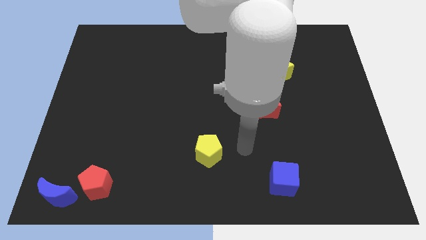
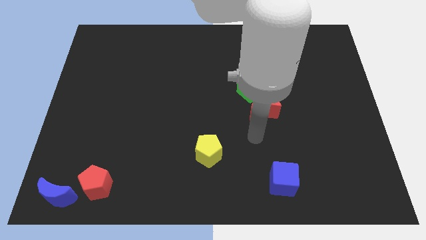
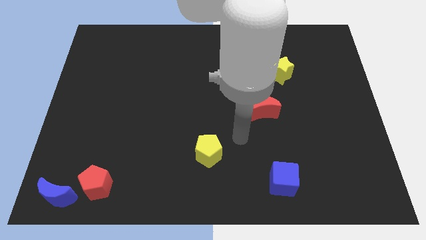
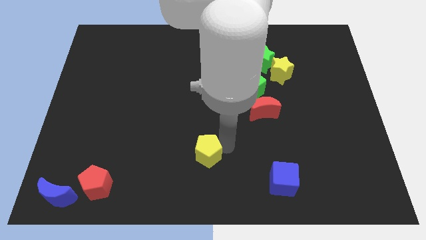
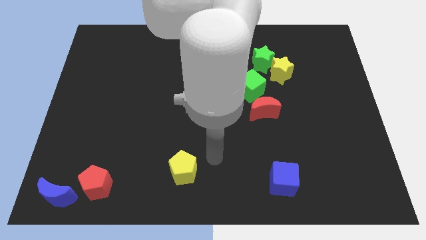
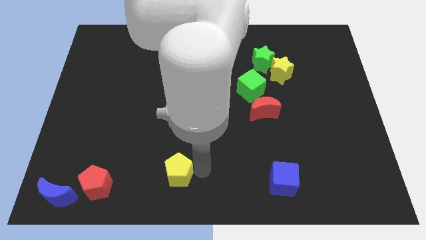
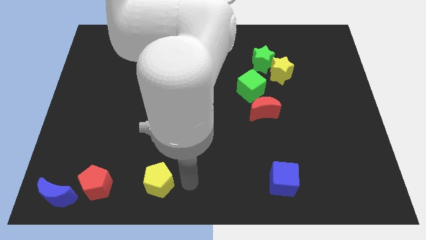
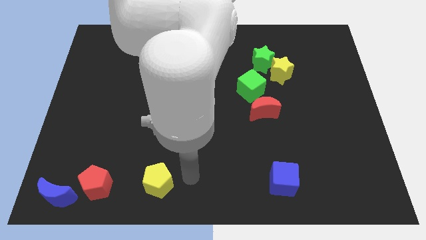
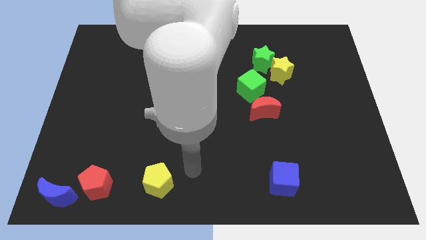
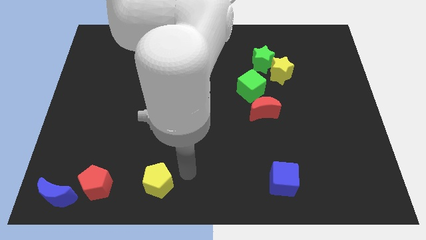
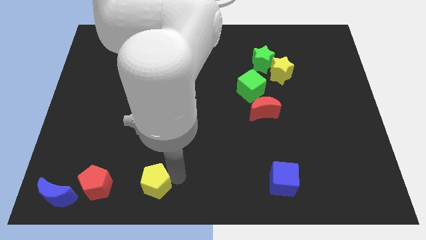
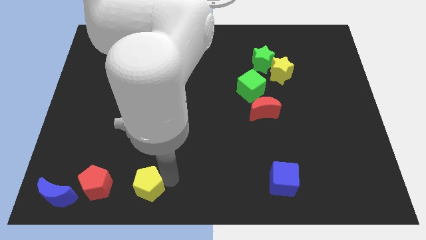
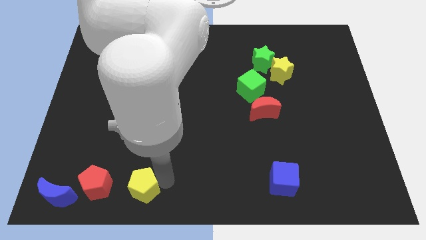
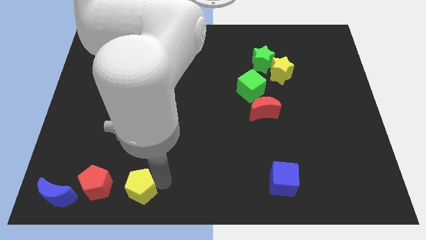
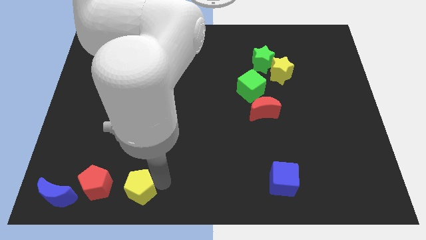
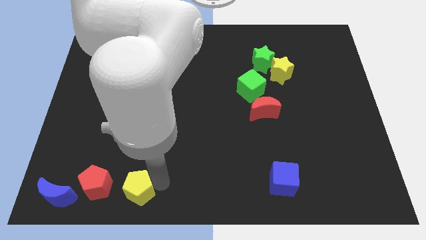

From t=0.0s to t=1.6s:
place the yellow pentagon at right side of the red pentagon

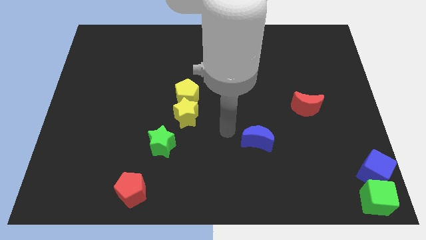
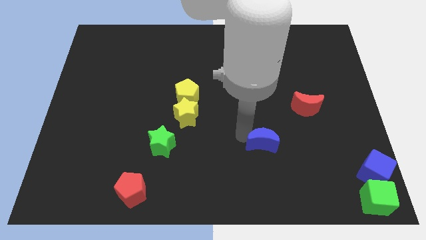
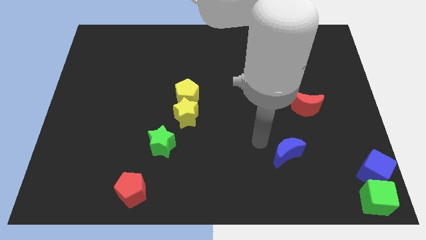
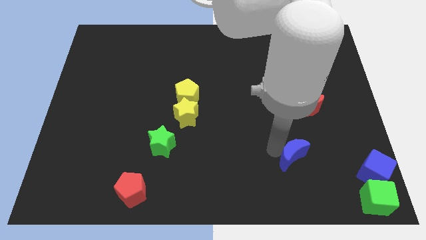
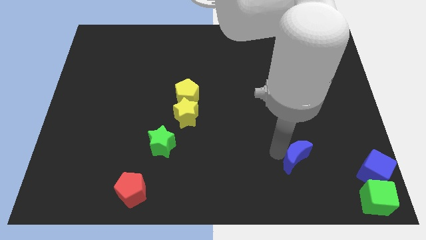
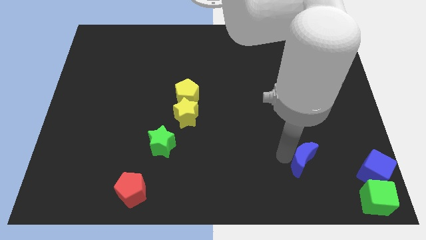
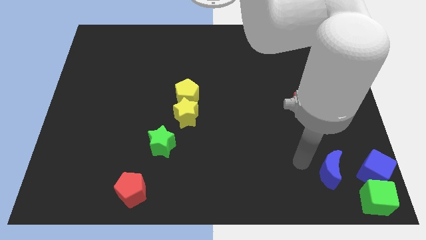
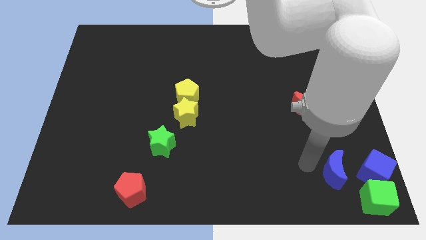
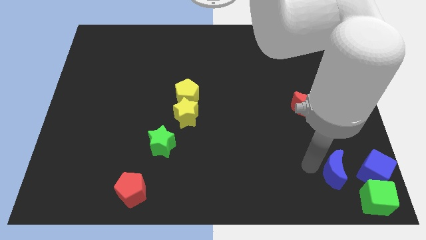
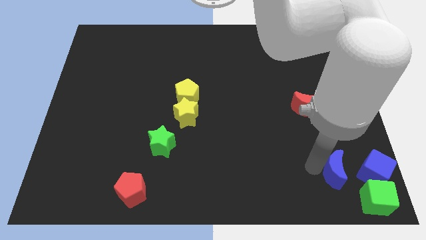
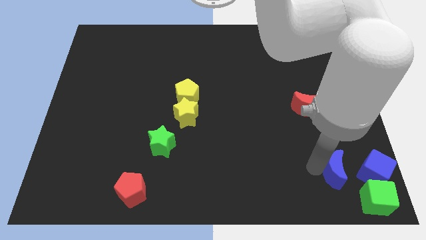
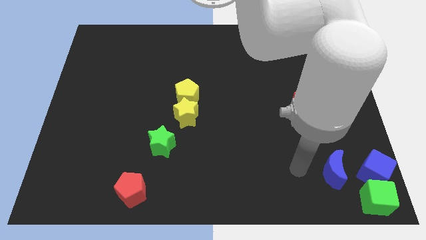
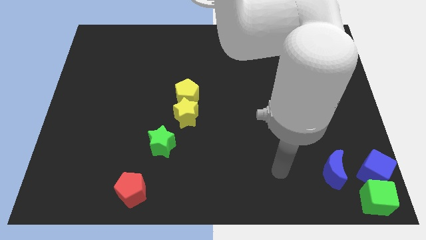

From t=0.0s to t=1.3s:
place the blue moon left to the blue cube

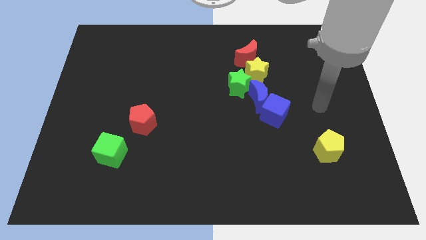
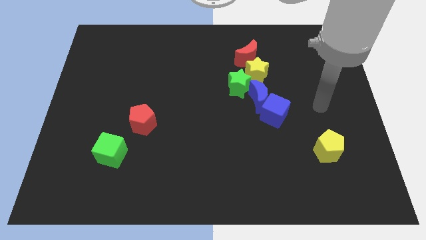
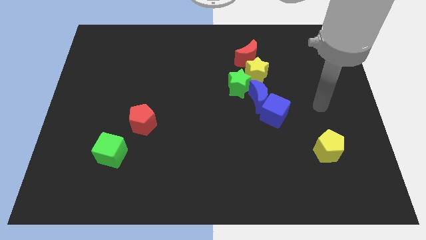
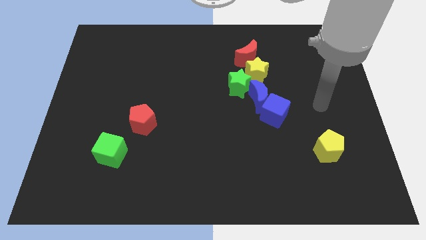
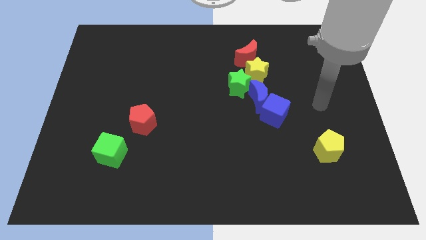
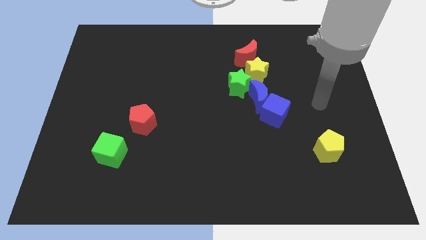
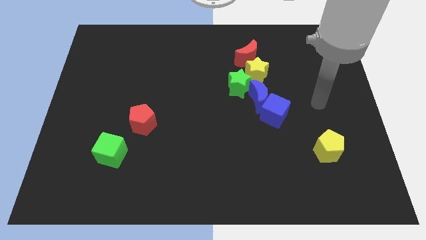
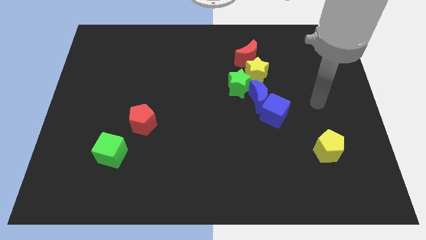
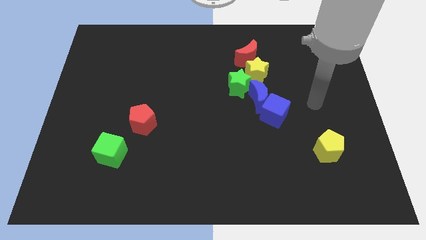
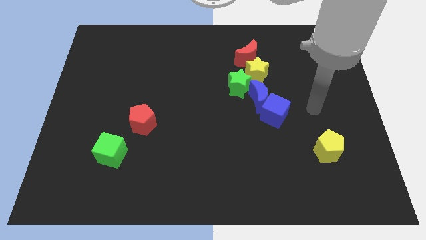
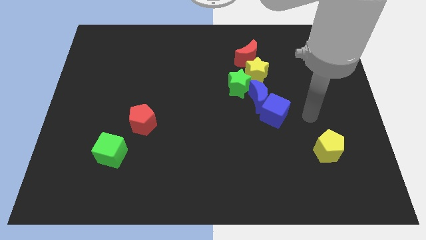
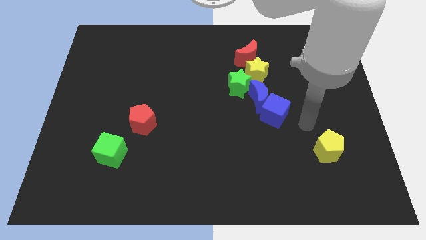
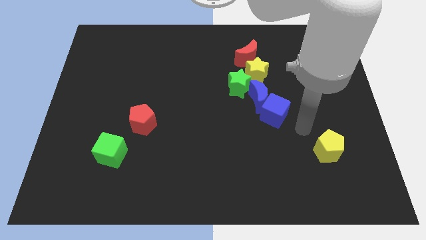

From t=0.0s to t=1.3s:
place your arm in between the blue cube and yellow pentagon

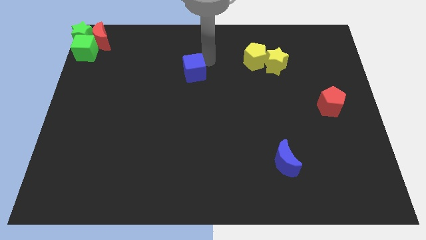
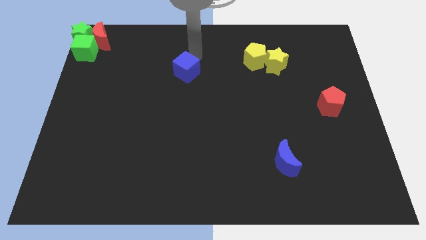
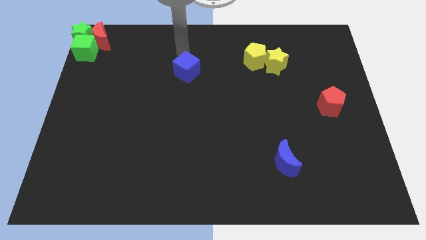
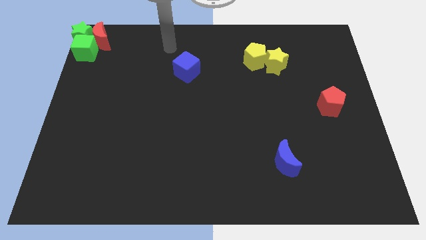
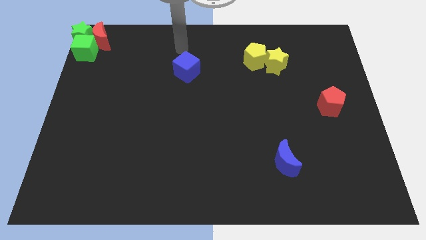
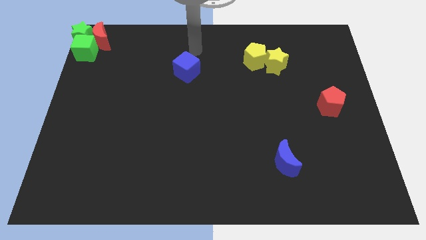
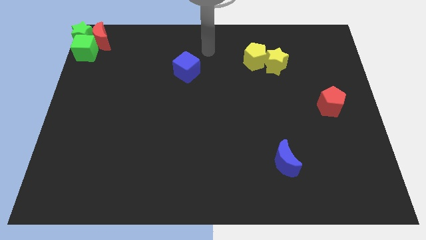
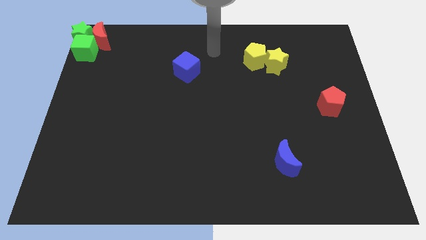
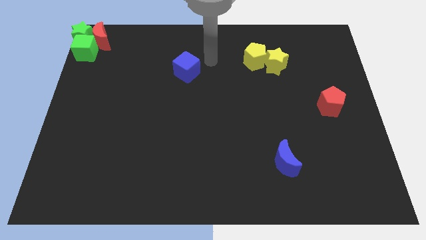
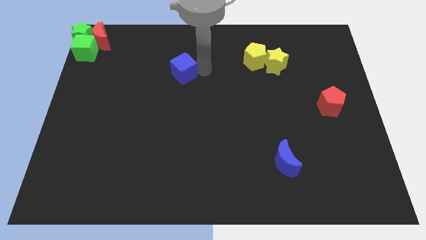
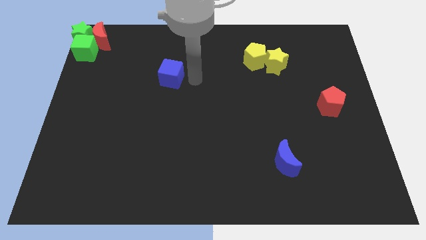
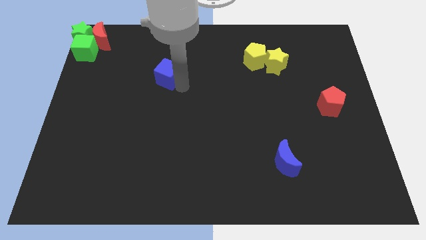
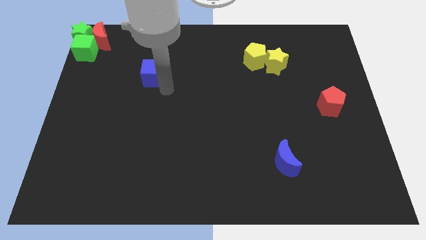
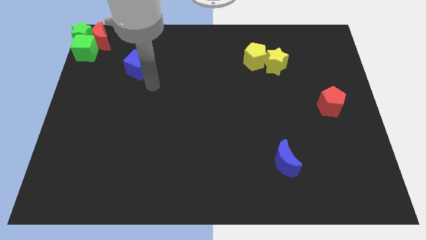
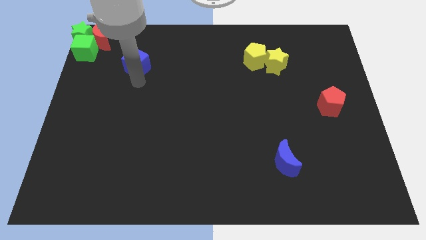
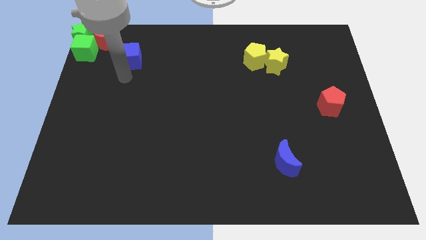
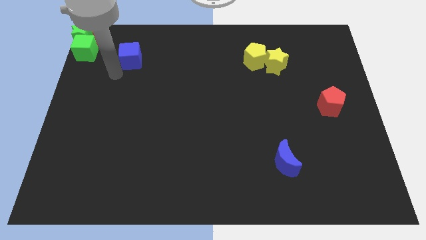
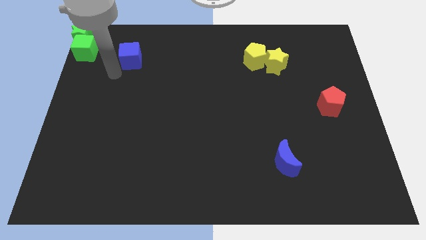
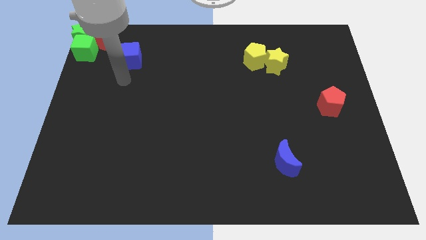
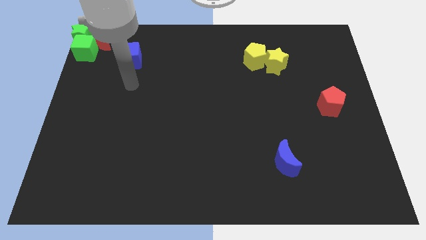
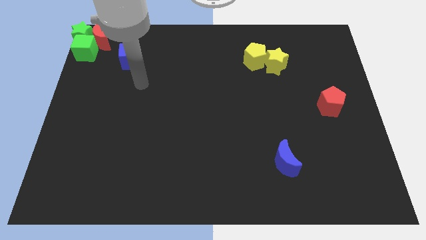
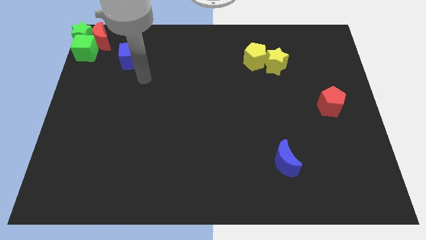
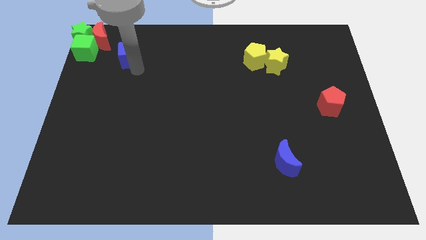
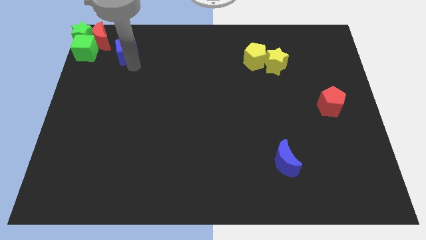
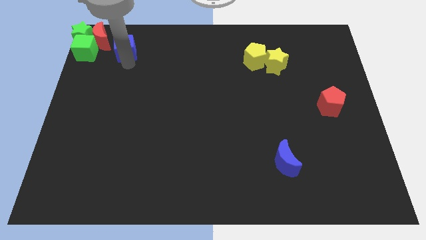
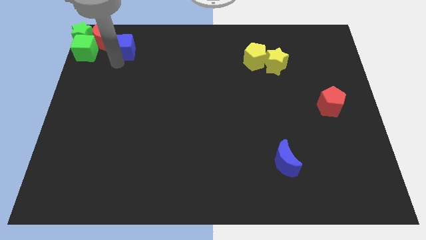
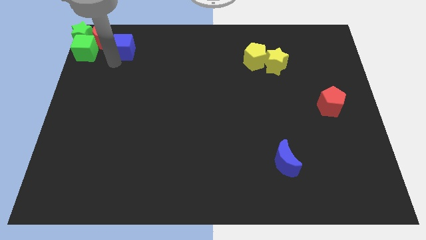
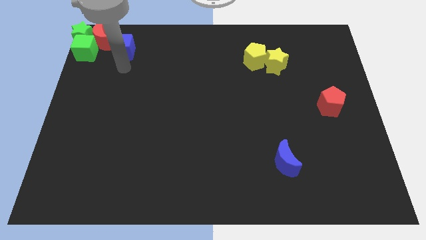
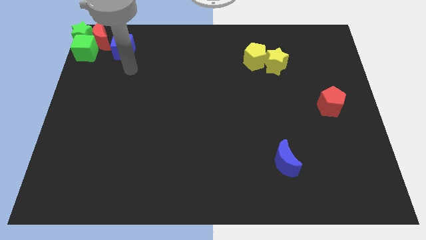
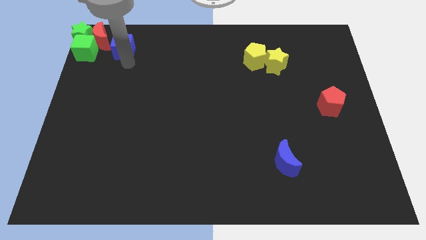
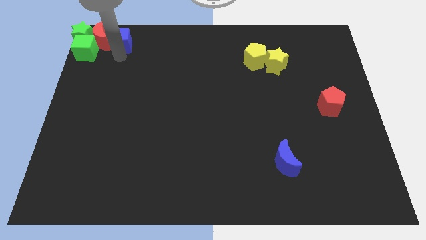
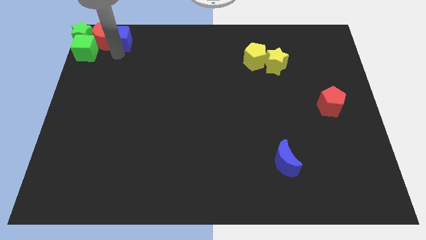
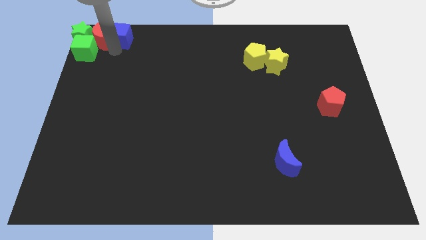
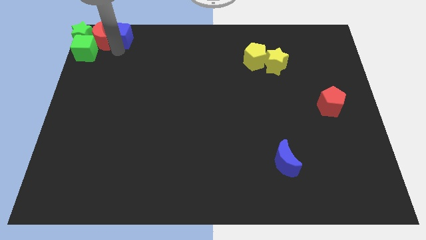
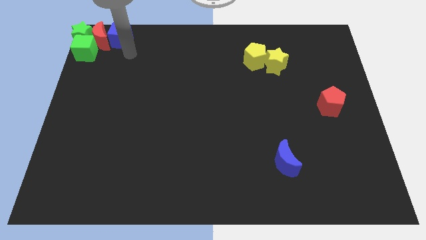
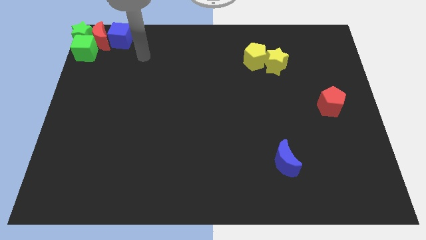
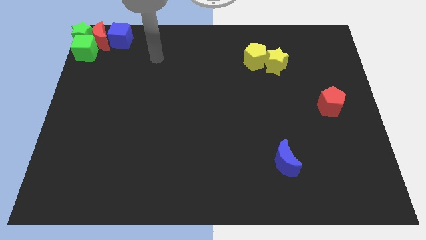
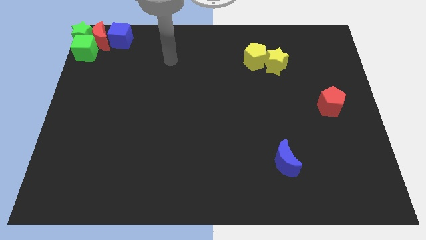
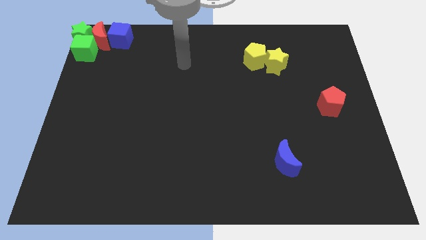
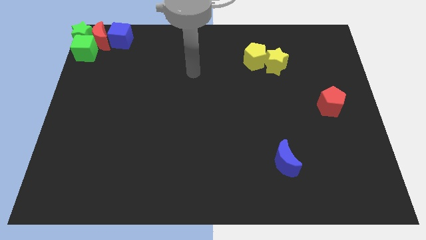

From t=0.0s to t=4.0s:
move the blue cube towards the red crescent

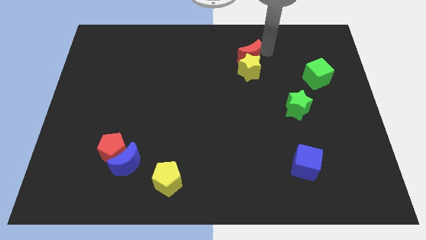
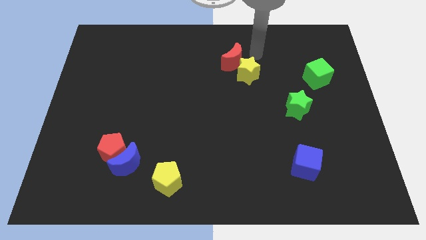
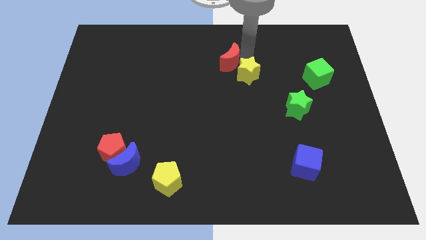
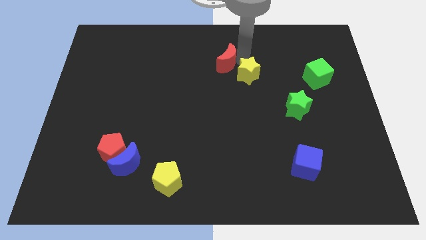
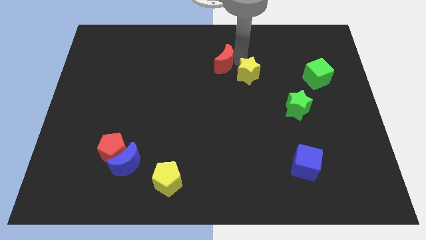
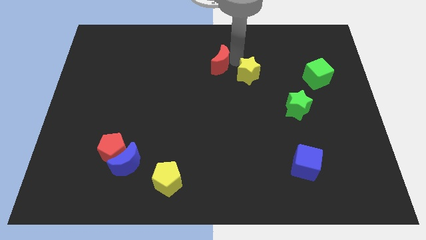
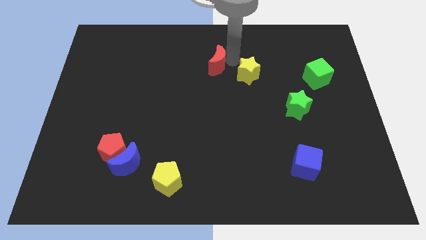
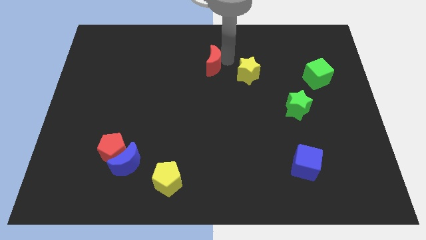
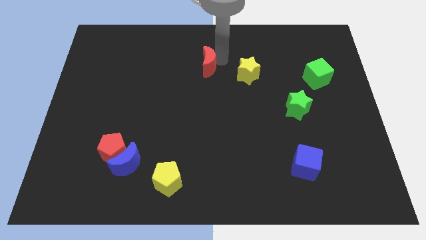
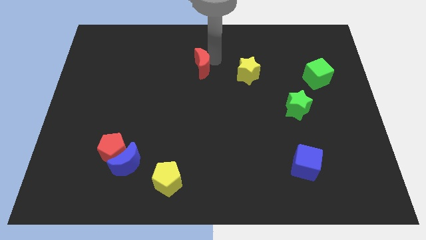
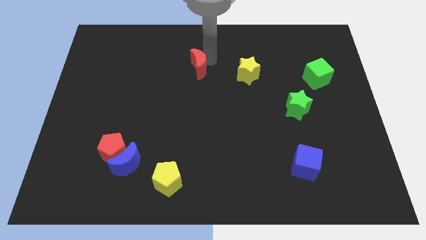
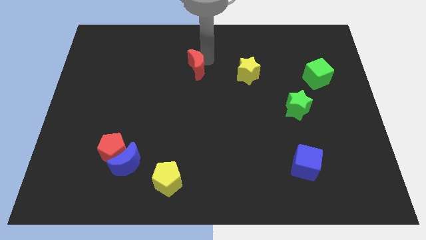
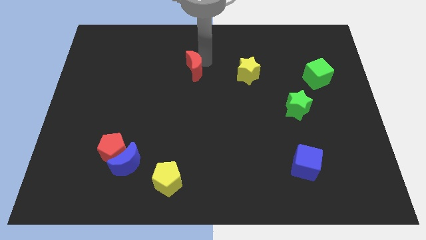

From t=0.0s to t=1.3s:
place red moon to the left of yellow star
